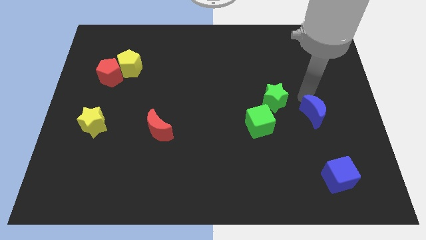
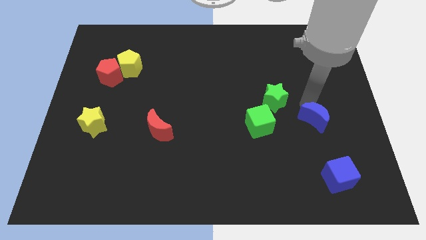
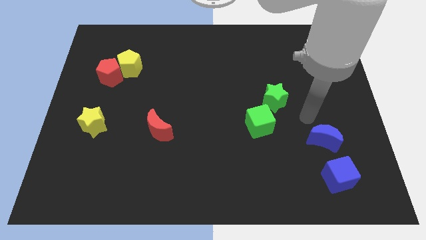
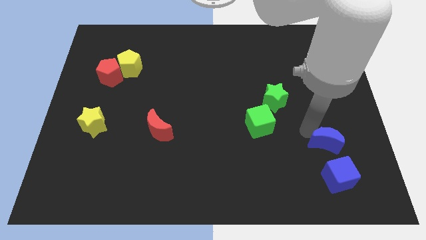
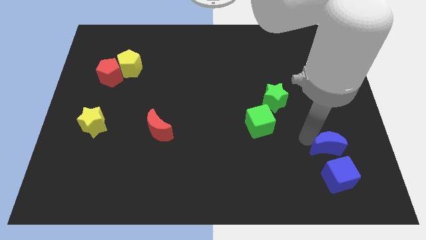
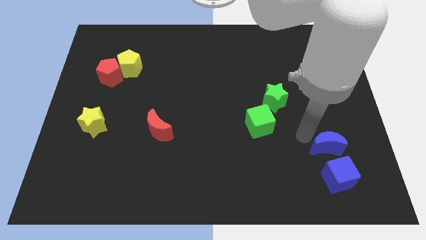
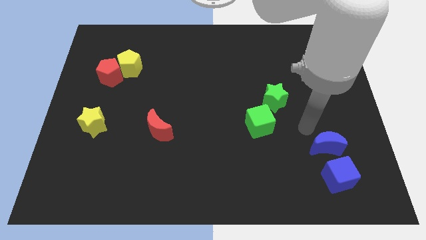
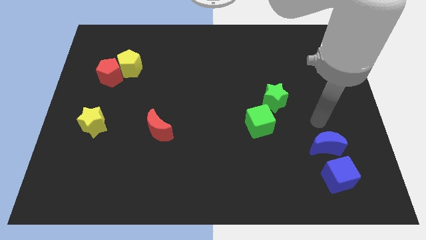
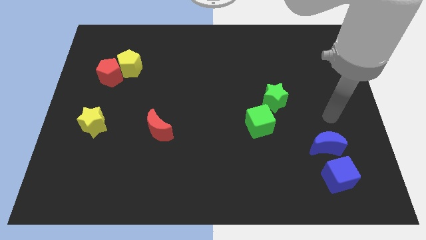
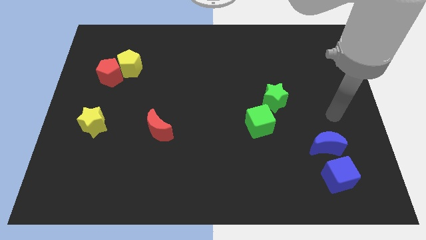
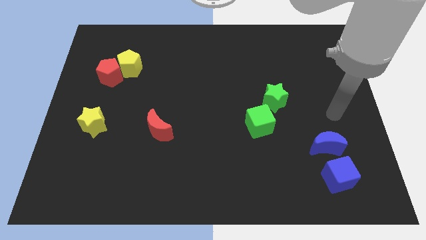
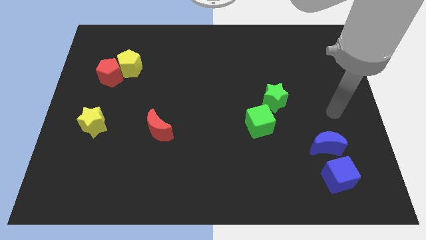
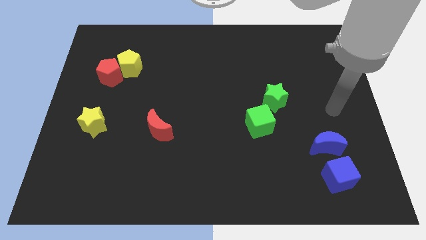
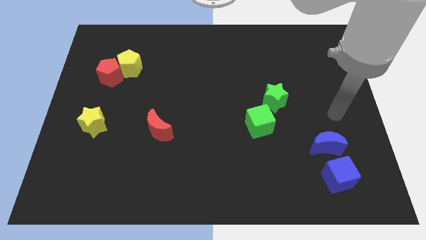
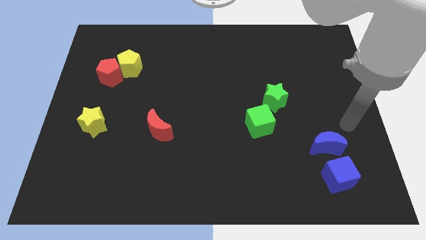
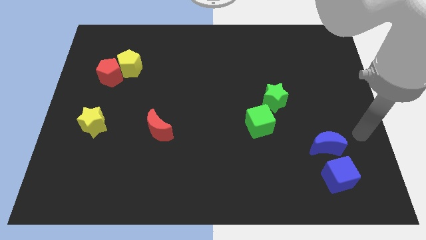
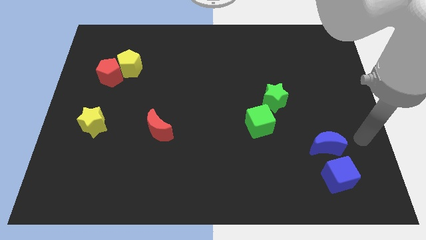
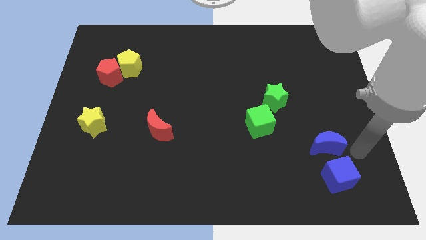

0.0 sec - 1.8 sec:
move the blue crescent to the top of the blue cube

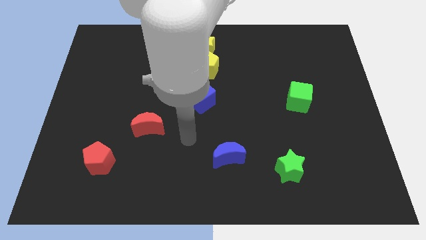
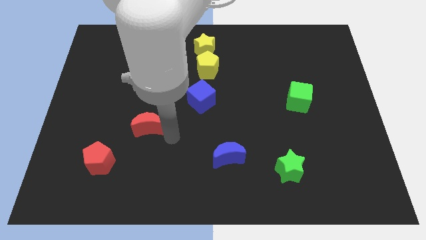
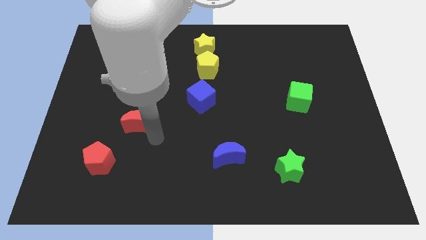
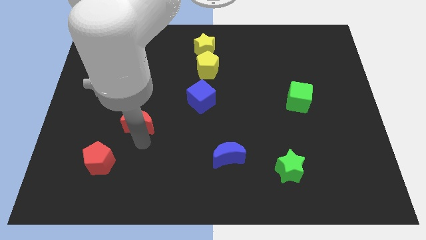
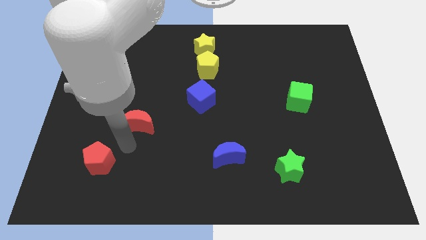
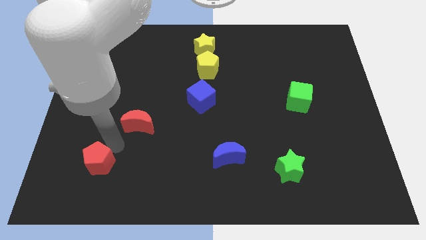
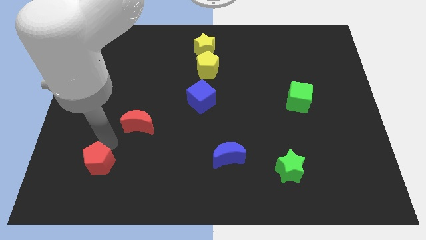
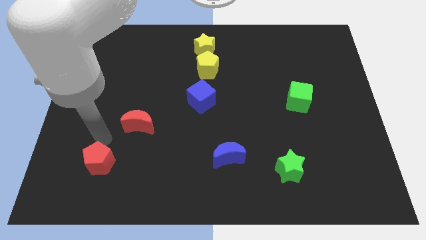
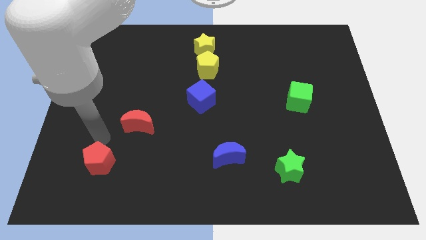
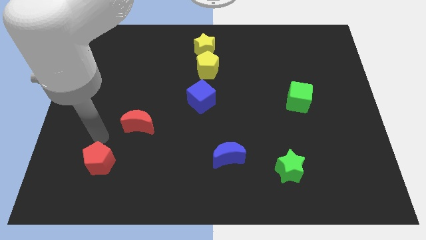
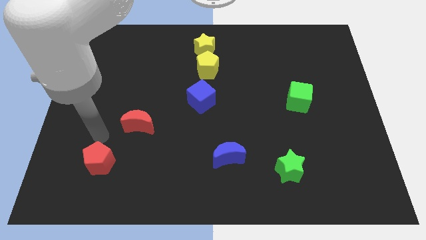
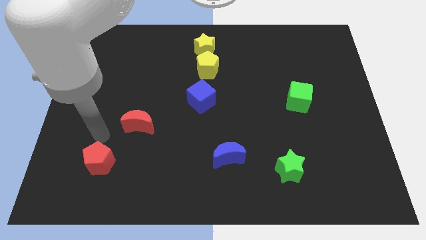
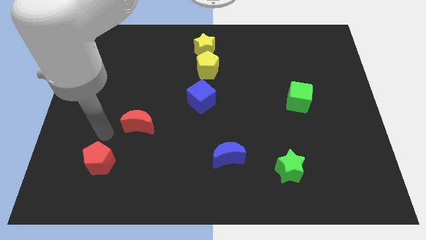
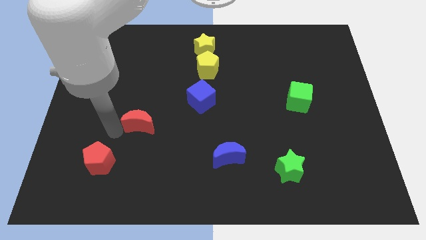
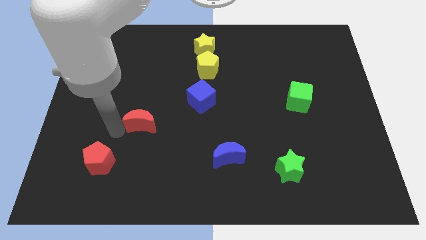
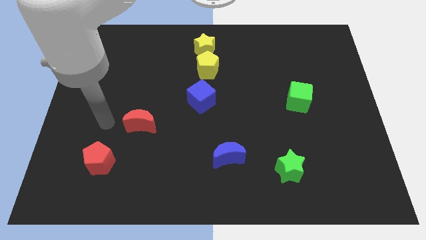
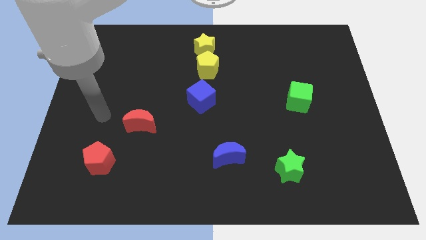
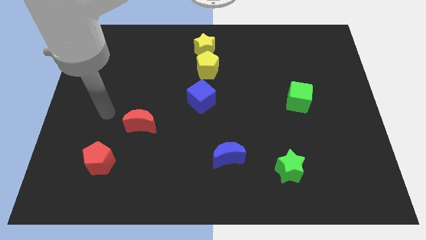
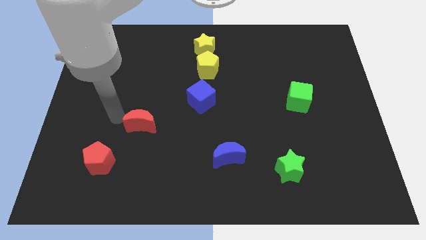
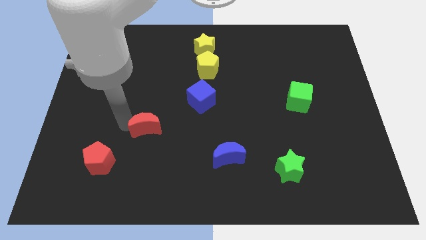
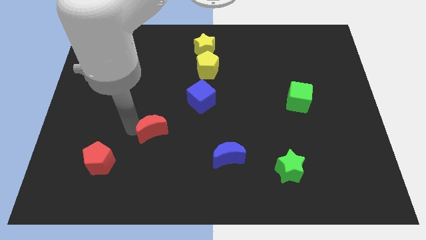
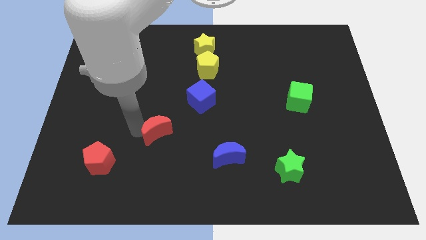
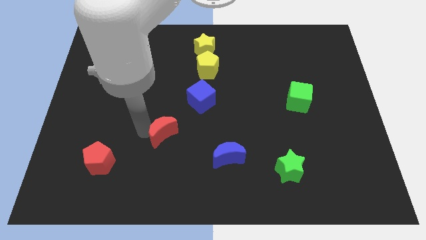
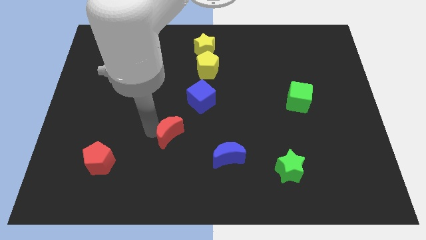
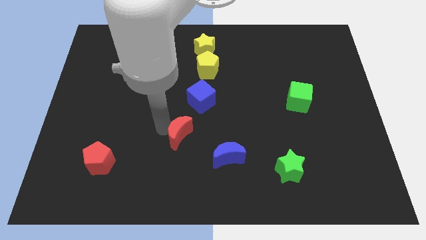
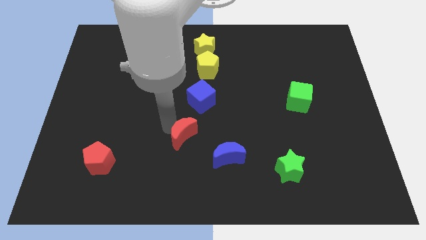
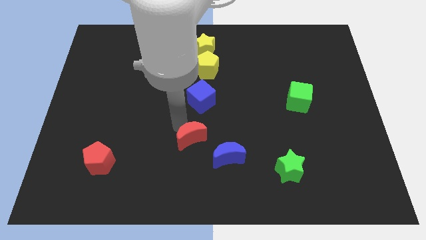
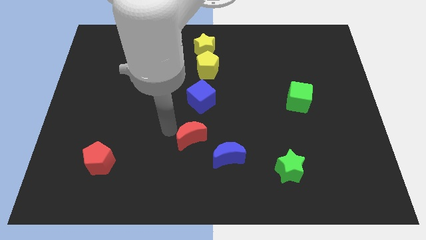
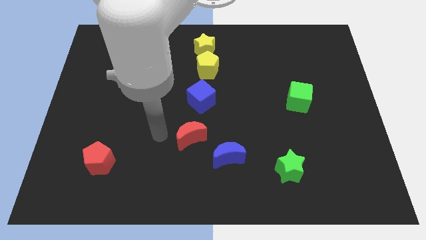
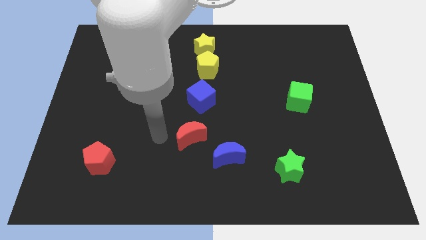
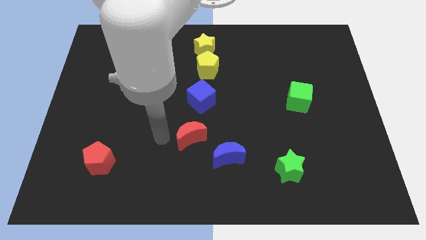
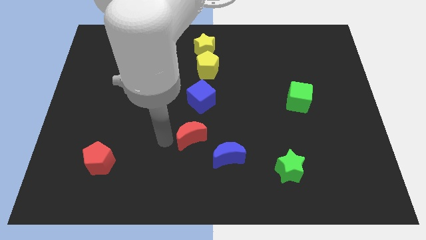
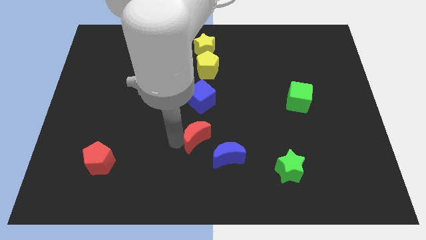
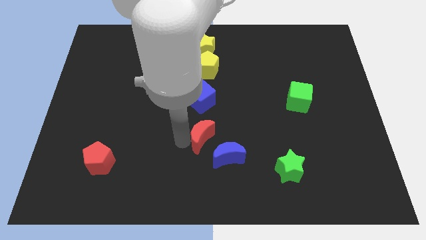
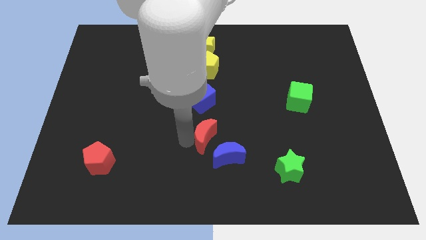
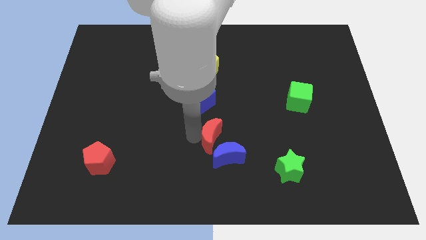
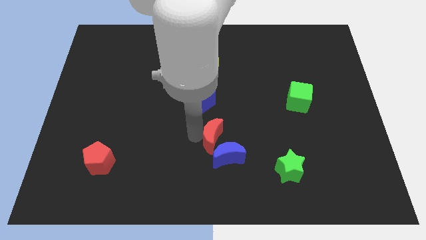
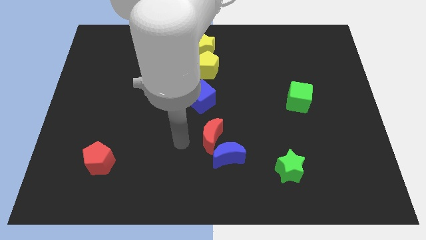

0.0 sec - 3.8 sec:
push the red crescent left above the blue crescent

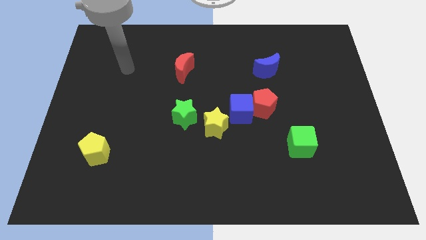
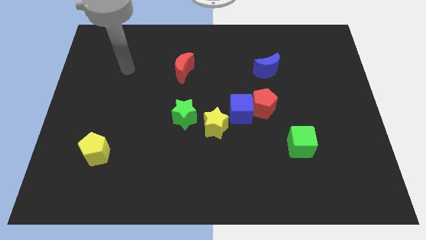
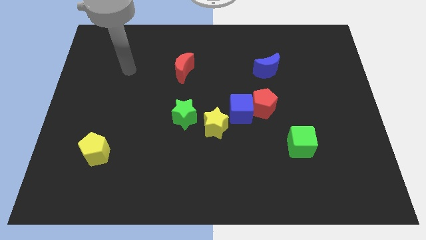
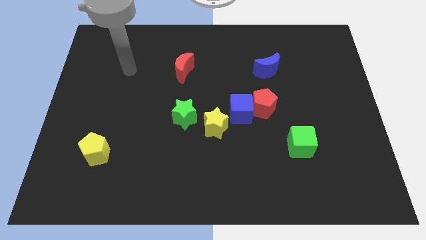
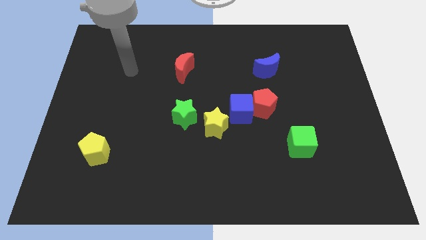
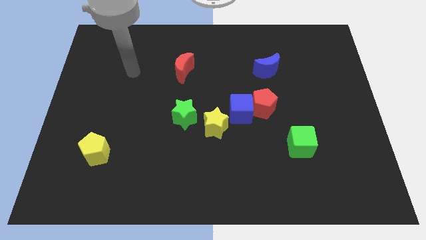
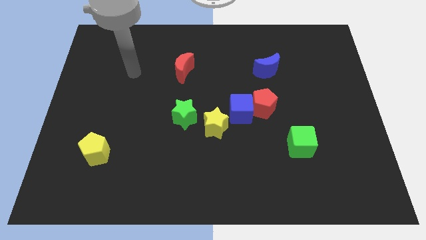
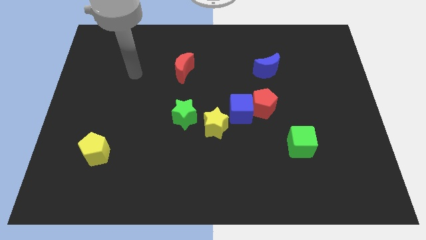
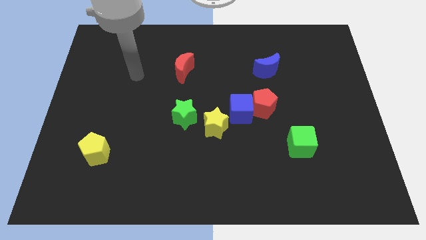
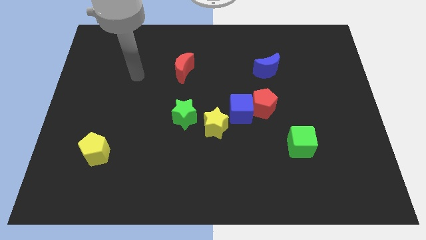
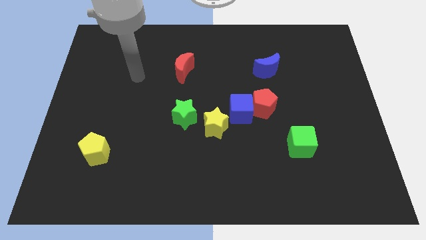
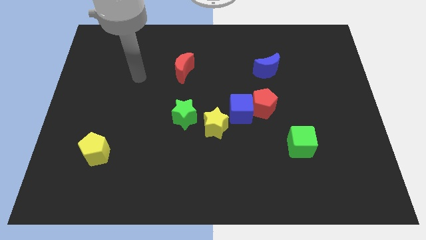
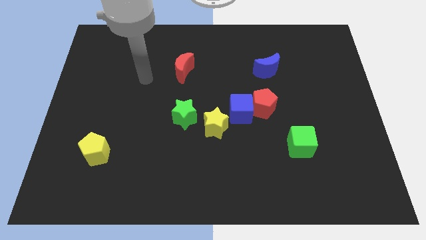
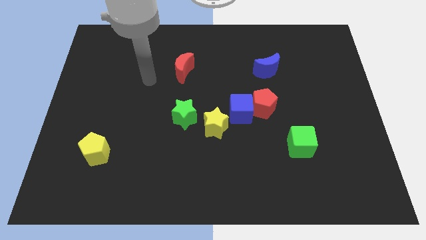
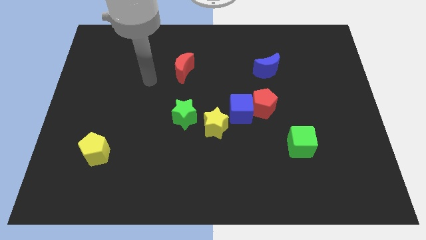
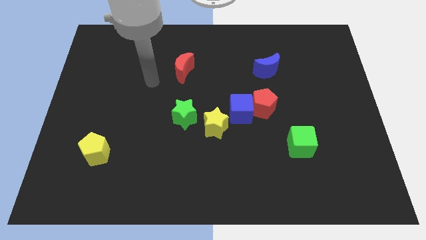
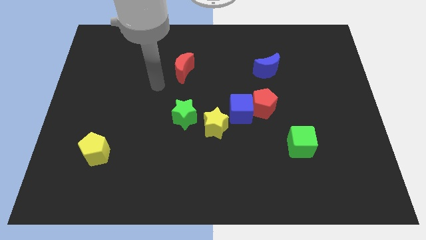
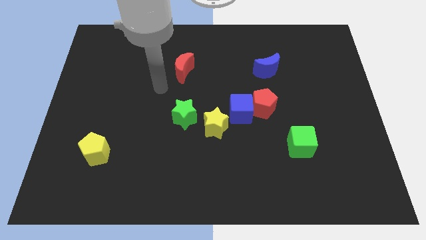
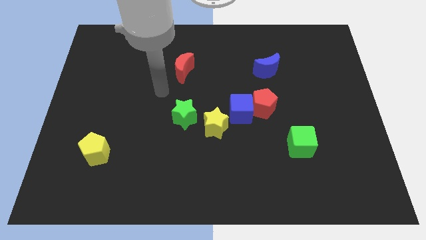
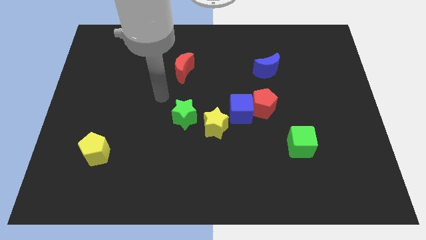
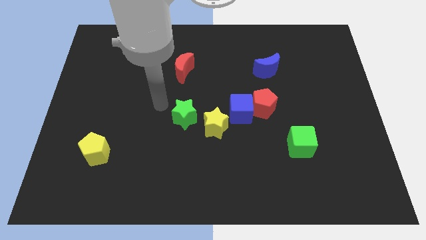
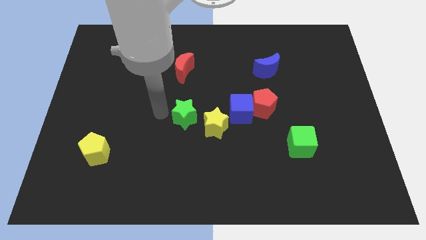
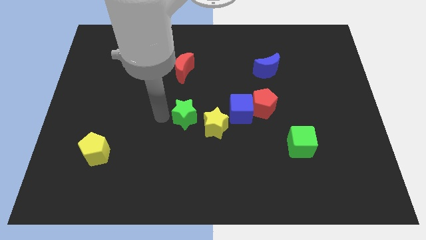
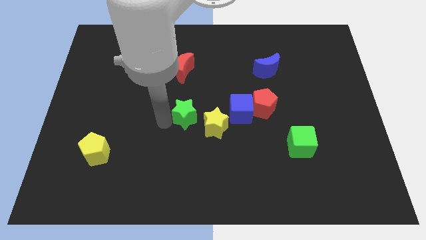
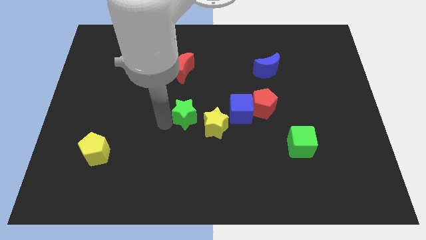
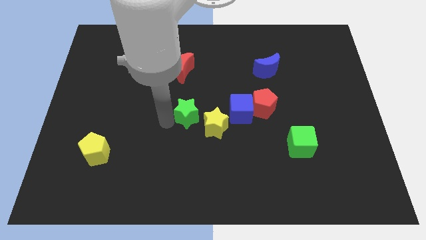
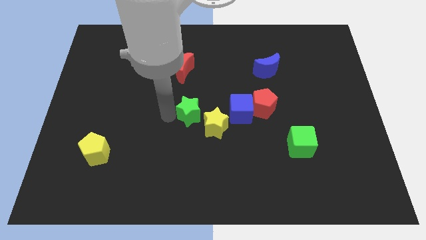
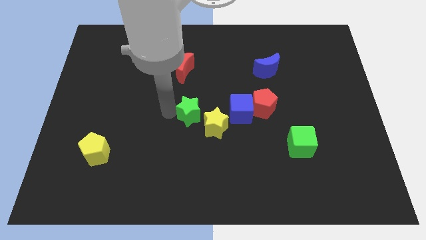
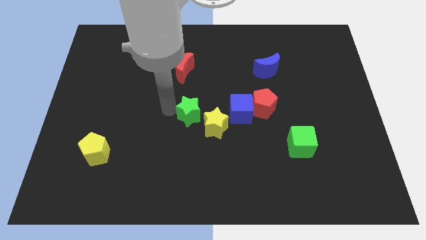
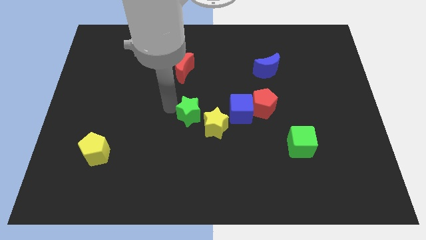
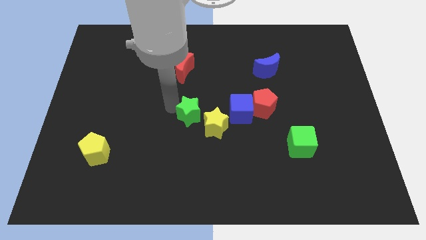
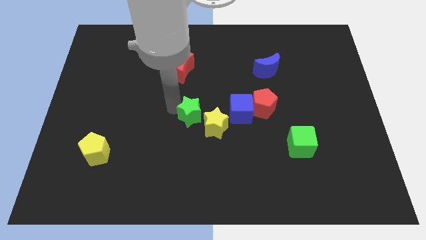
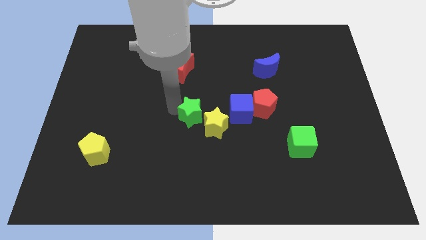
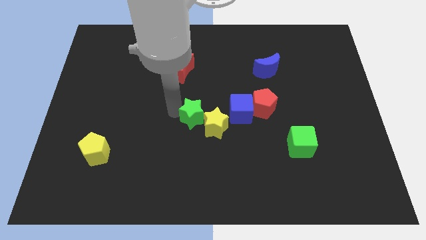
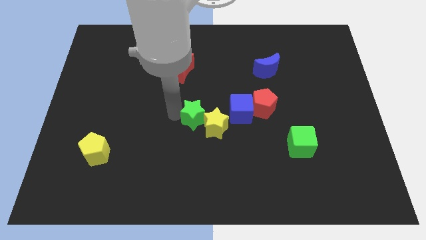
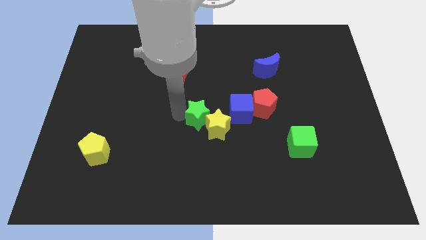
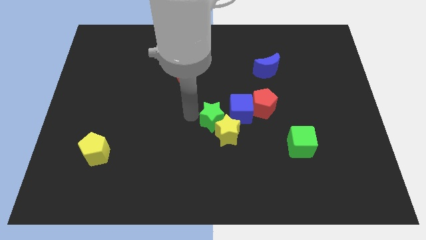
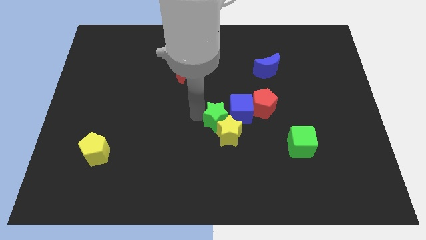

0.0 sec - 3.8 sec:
move green star into the yellow star
